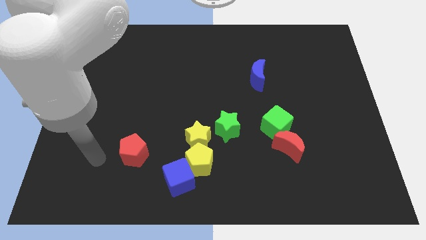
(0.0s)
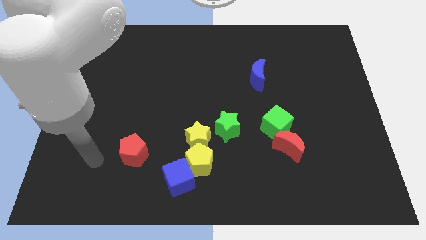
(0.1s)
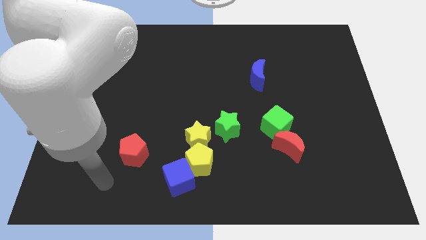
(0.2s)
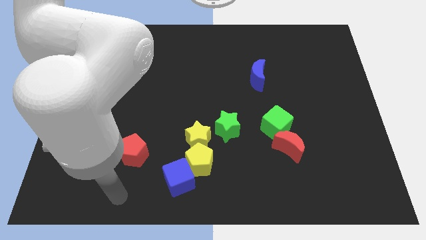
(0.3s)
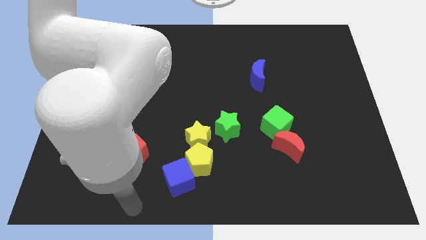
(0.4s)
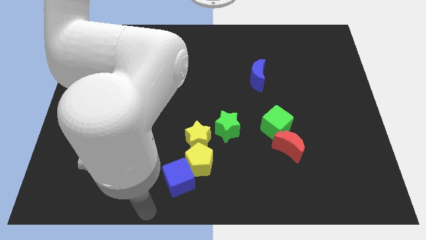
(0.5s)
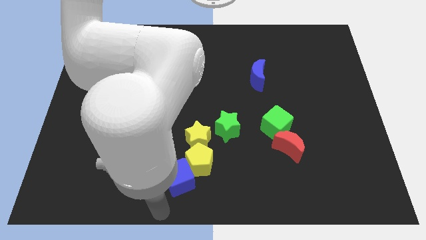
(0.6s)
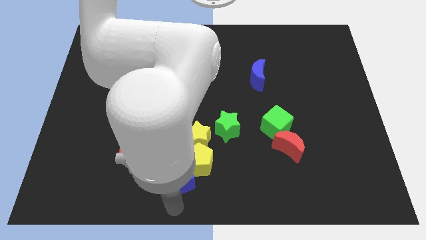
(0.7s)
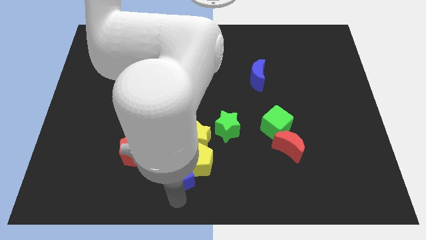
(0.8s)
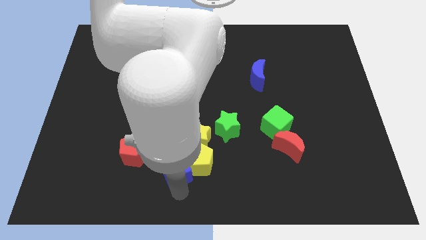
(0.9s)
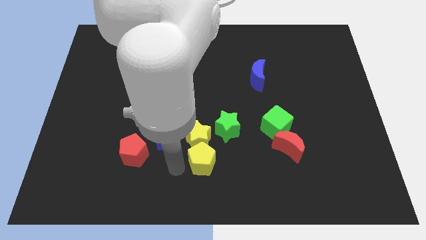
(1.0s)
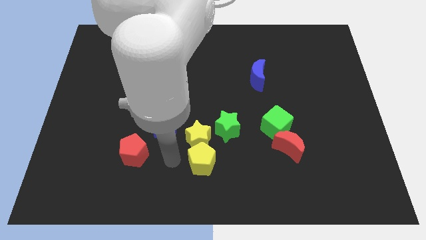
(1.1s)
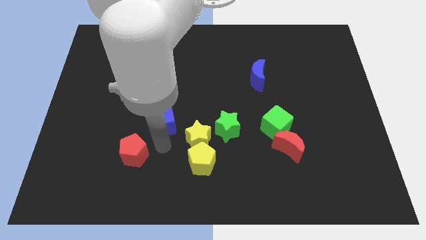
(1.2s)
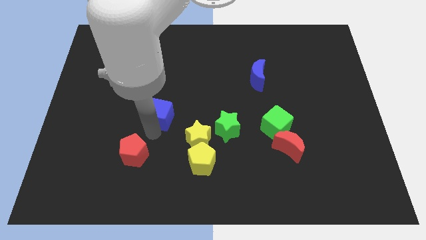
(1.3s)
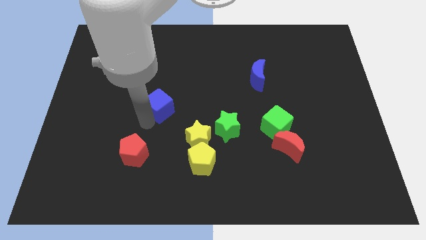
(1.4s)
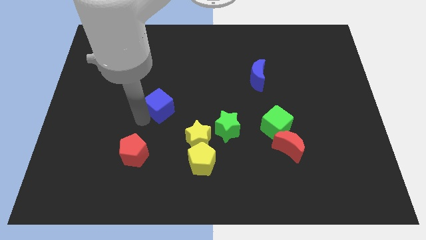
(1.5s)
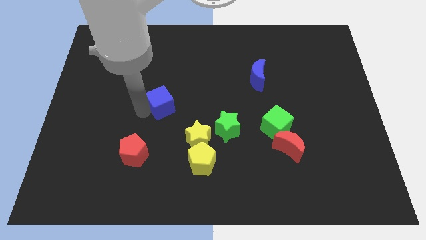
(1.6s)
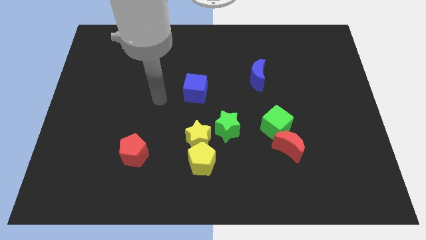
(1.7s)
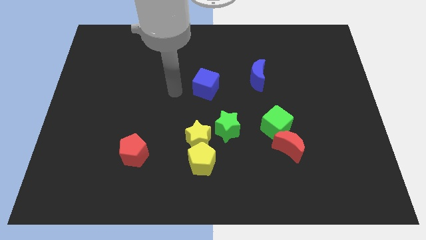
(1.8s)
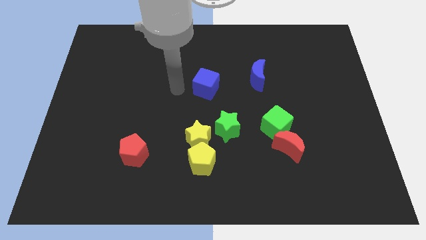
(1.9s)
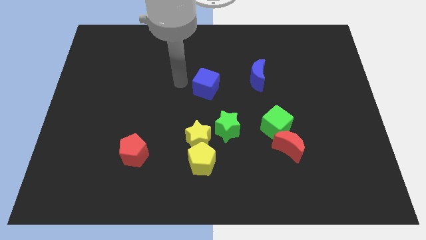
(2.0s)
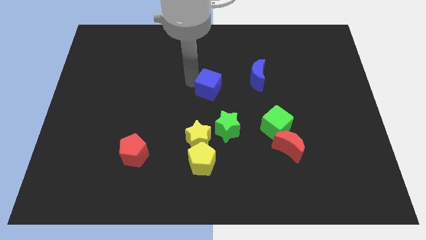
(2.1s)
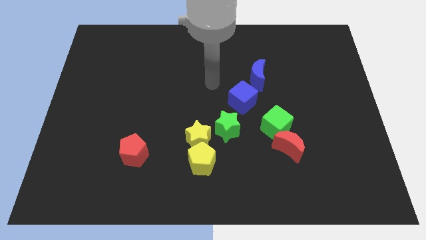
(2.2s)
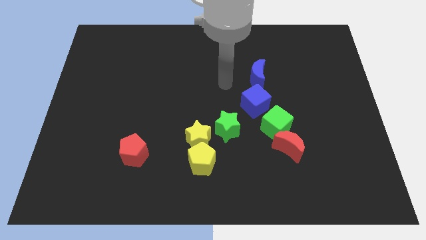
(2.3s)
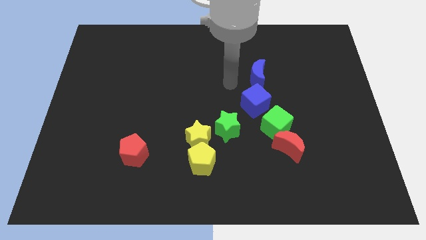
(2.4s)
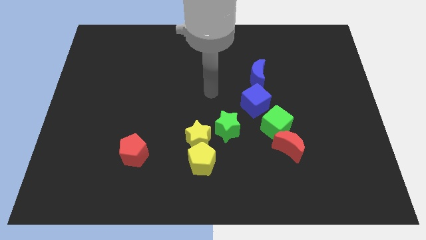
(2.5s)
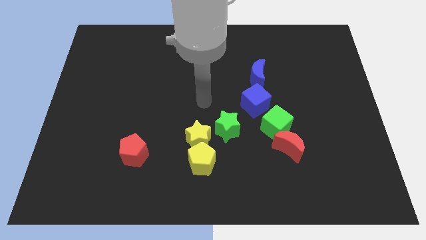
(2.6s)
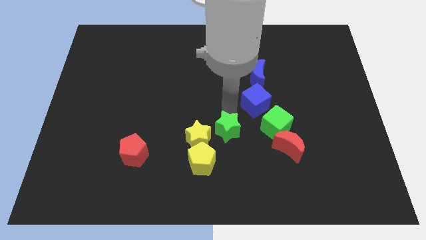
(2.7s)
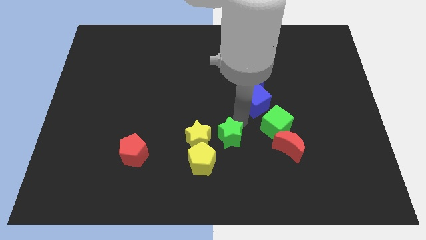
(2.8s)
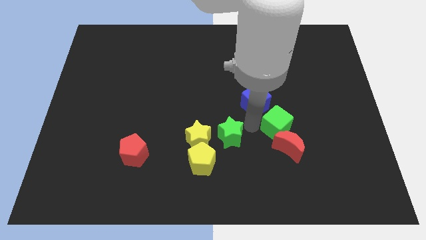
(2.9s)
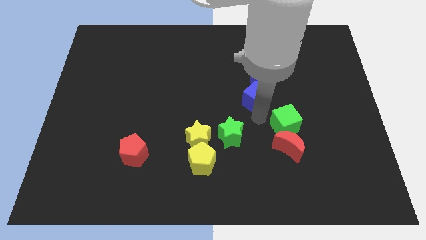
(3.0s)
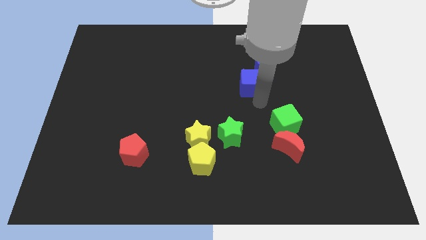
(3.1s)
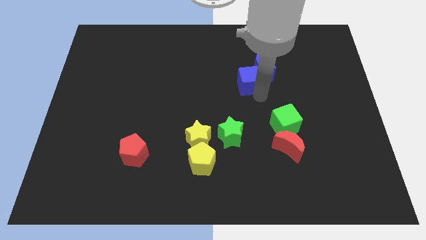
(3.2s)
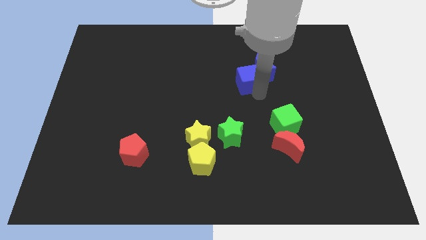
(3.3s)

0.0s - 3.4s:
slide the blue cube close to the blue moon

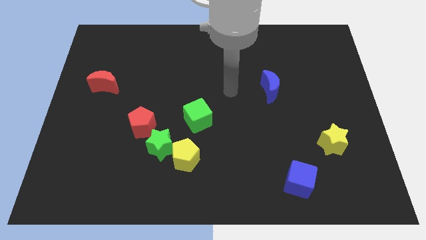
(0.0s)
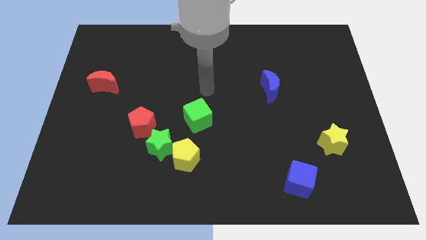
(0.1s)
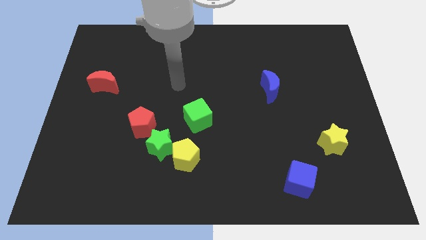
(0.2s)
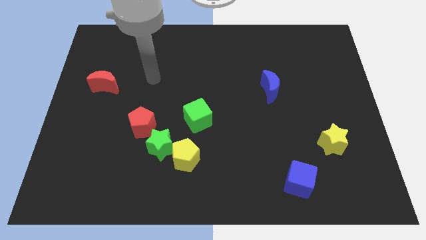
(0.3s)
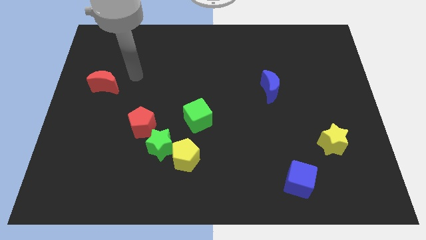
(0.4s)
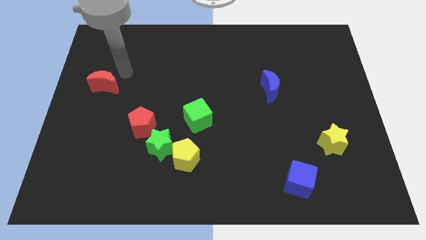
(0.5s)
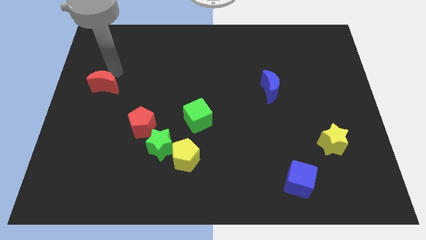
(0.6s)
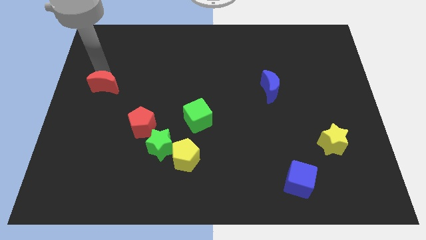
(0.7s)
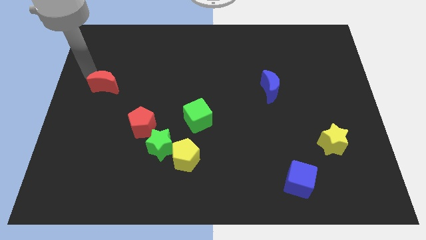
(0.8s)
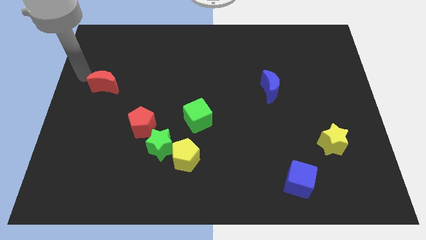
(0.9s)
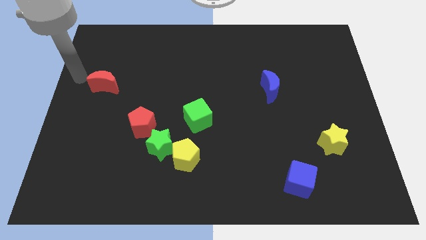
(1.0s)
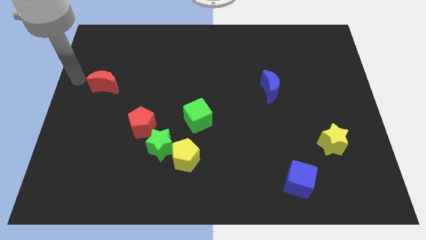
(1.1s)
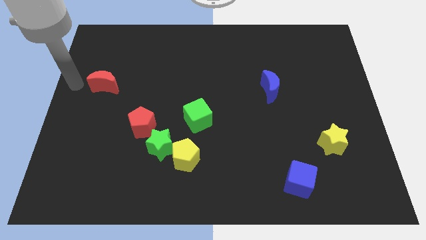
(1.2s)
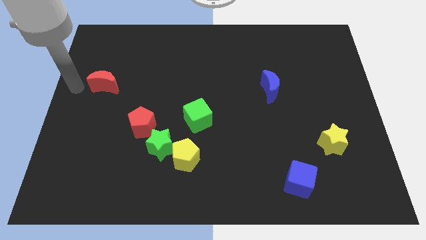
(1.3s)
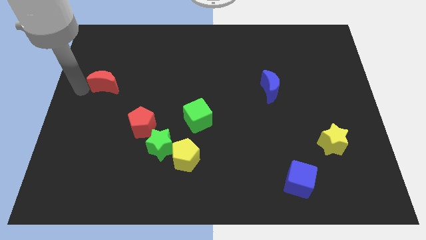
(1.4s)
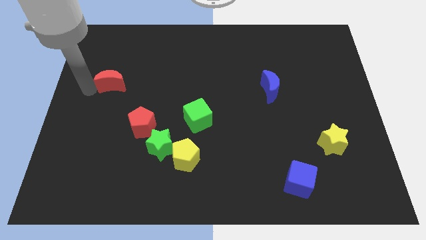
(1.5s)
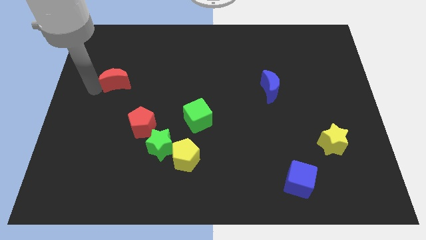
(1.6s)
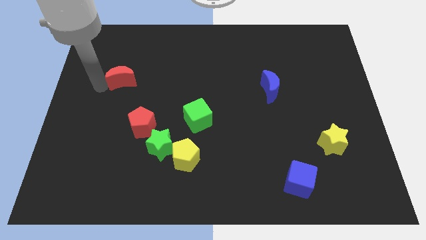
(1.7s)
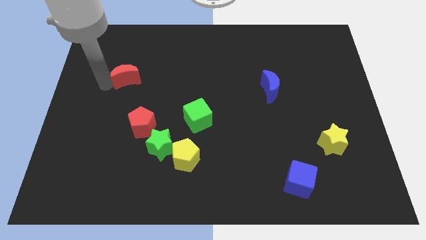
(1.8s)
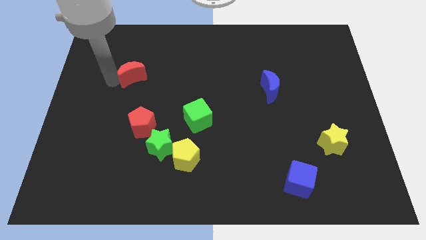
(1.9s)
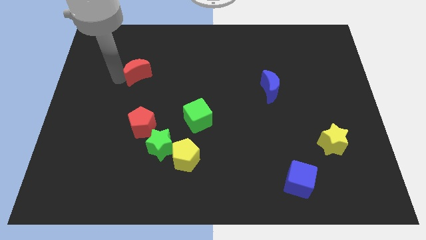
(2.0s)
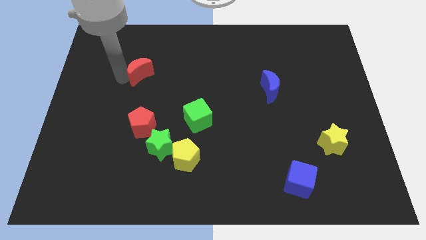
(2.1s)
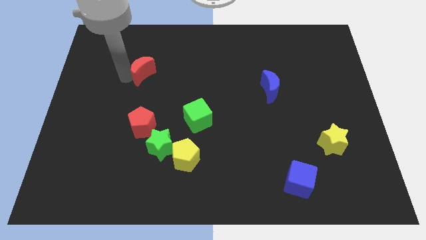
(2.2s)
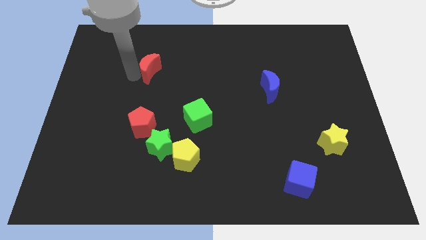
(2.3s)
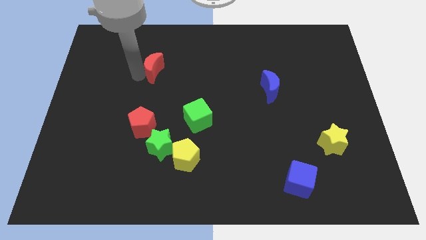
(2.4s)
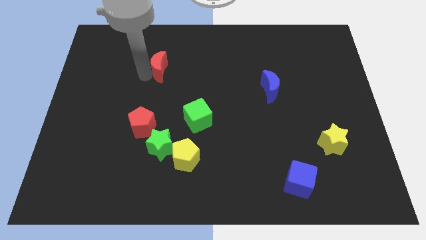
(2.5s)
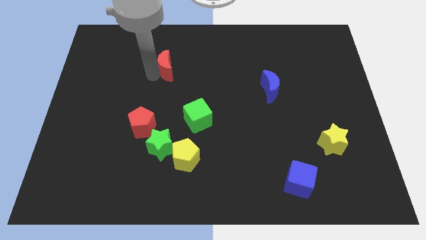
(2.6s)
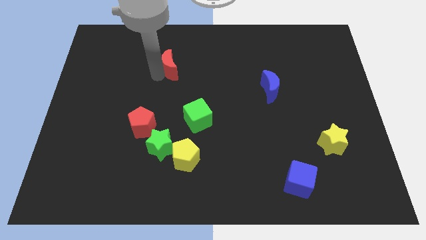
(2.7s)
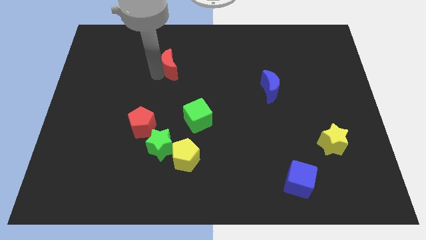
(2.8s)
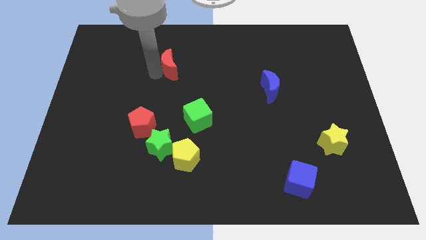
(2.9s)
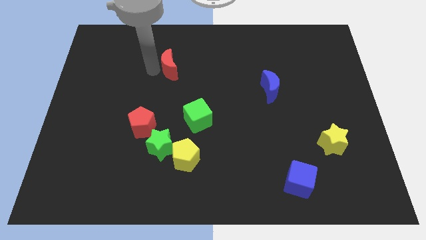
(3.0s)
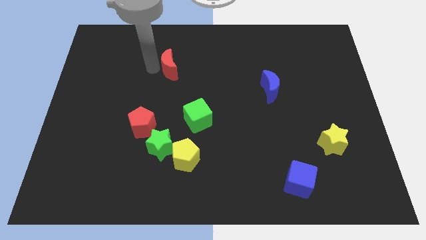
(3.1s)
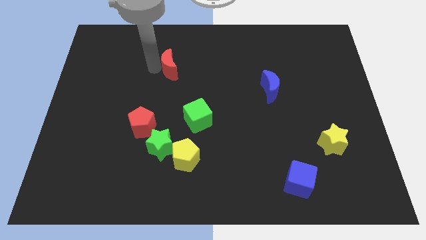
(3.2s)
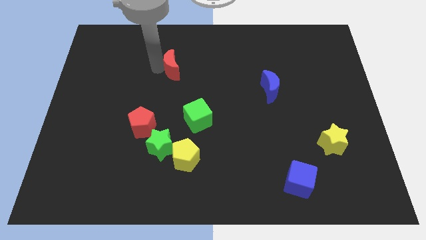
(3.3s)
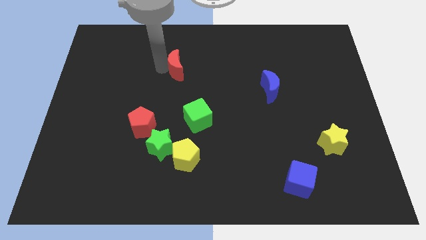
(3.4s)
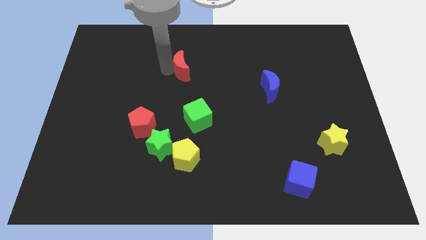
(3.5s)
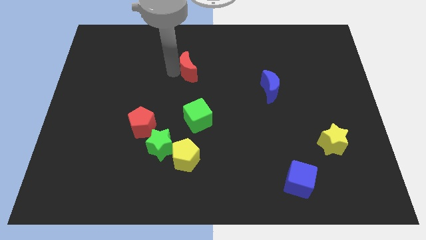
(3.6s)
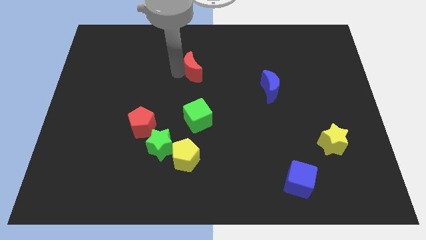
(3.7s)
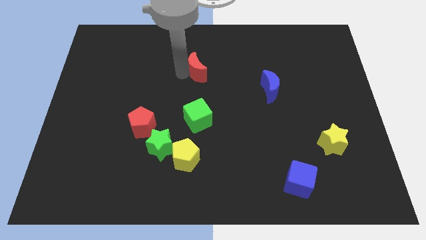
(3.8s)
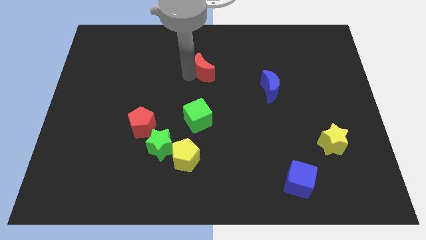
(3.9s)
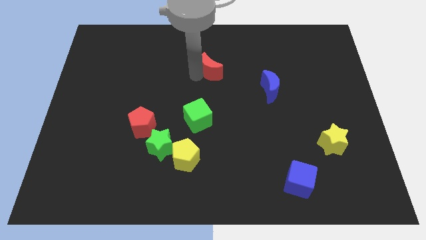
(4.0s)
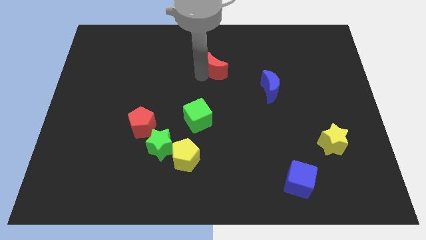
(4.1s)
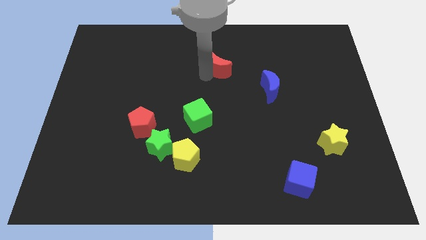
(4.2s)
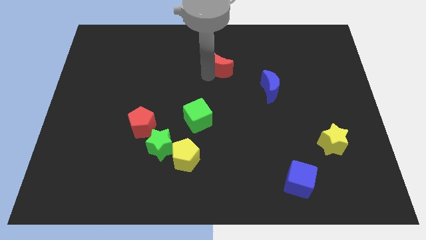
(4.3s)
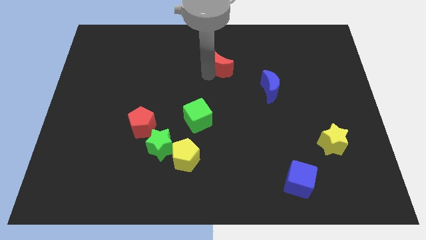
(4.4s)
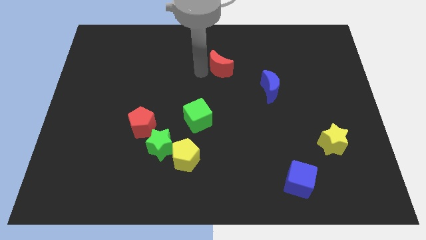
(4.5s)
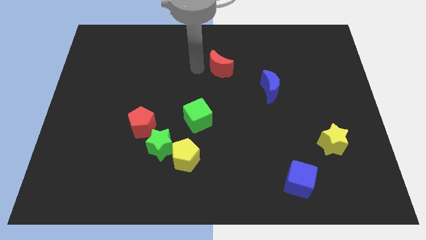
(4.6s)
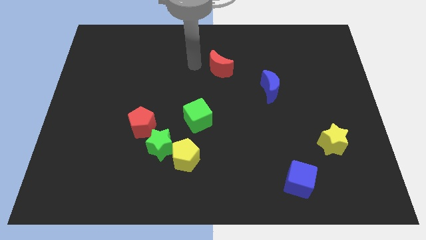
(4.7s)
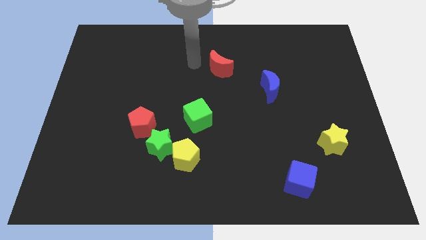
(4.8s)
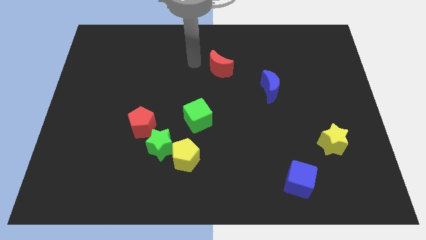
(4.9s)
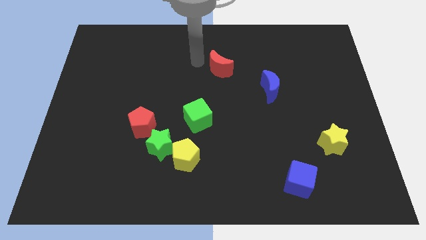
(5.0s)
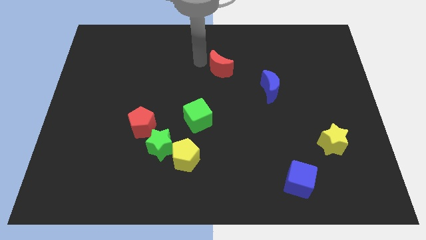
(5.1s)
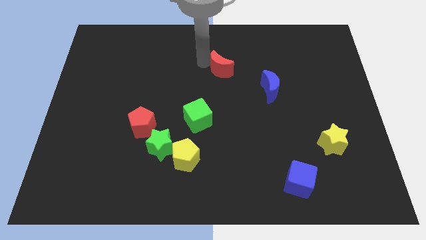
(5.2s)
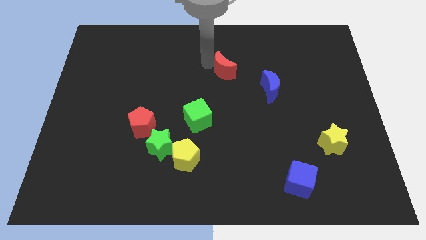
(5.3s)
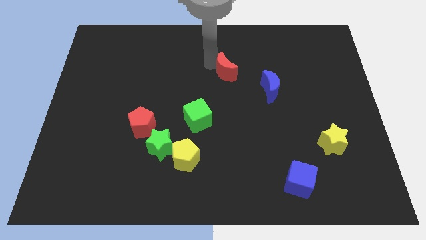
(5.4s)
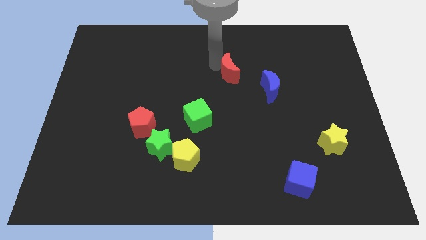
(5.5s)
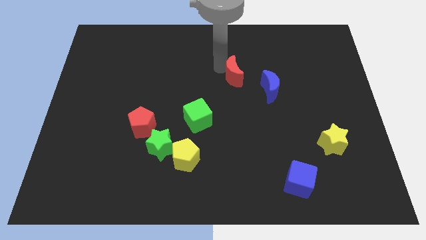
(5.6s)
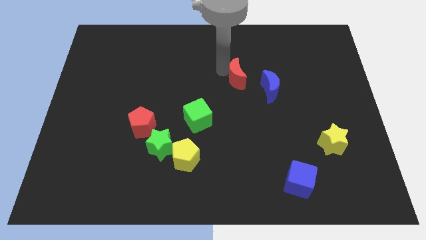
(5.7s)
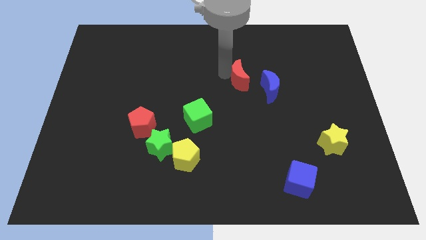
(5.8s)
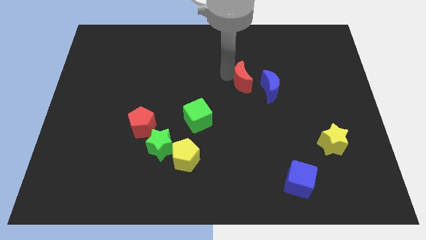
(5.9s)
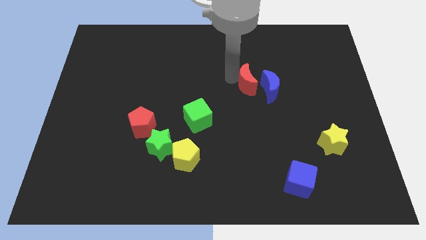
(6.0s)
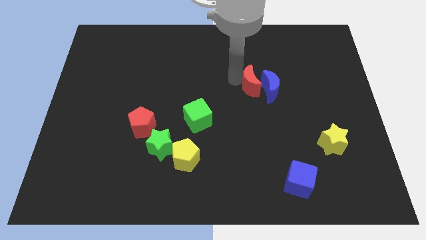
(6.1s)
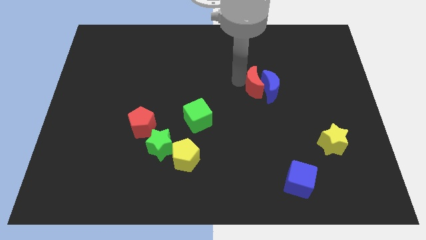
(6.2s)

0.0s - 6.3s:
move the red moon close to the blue moon
